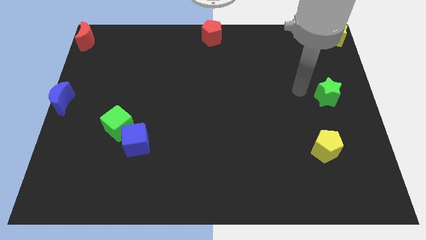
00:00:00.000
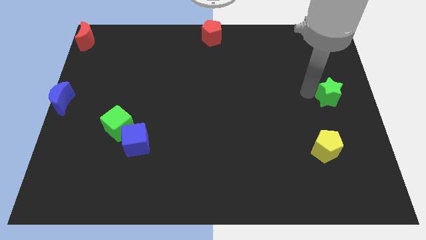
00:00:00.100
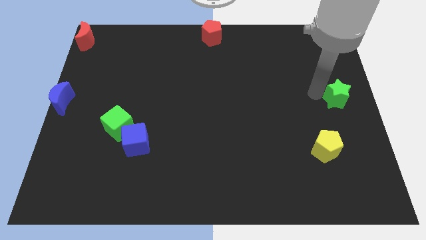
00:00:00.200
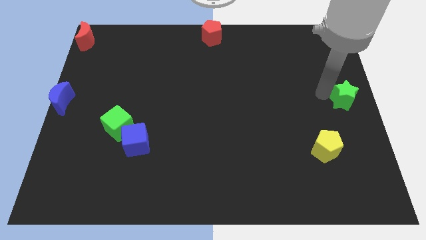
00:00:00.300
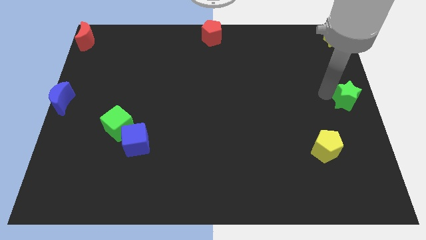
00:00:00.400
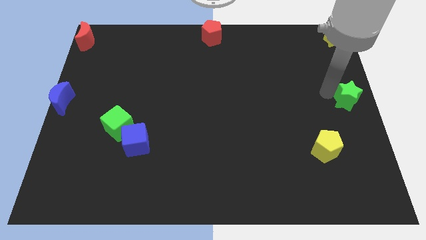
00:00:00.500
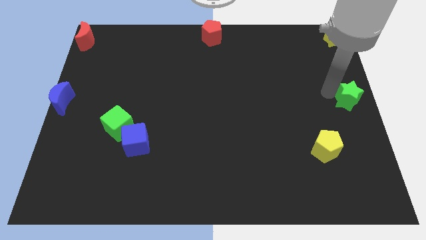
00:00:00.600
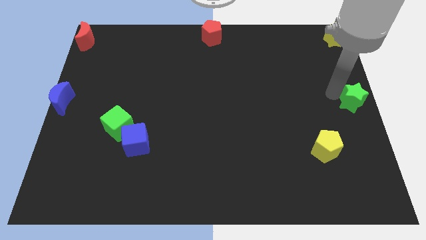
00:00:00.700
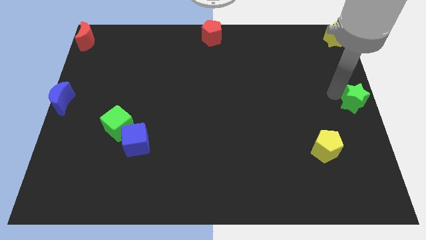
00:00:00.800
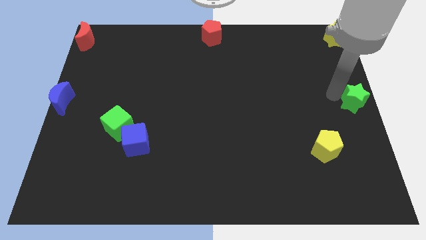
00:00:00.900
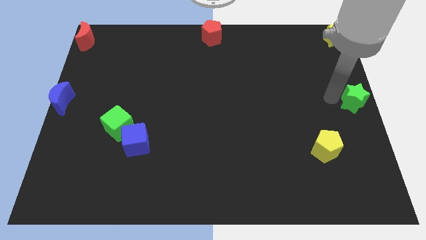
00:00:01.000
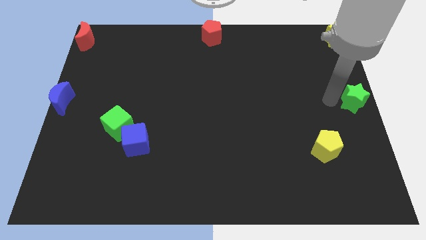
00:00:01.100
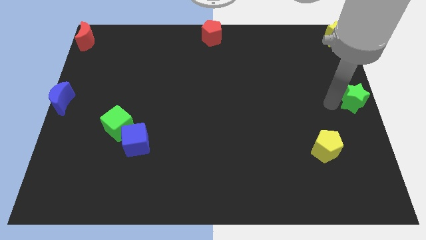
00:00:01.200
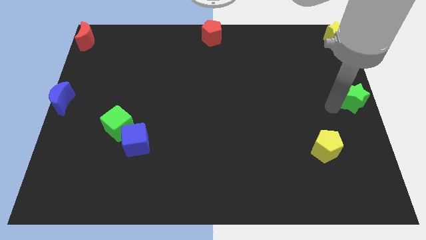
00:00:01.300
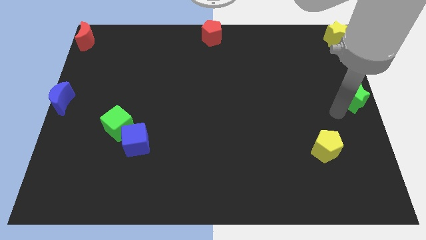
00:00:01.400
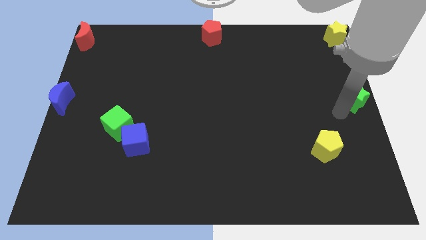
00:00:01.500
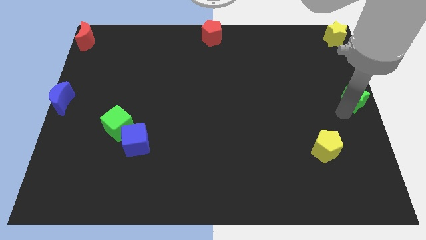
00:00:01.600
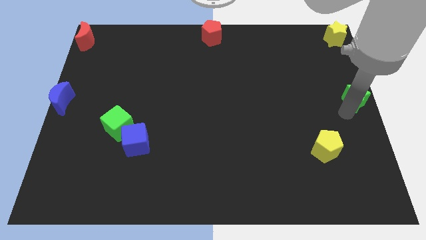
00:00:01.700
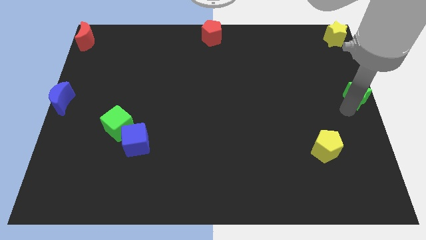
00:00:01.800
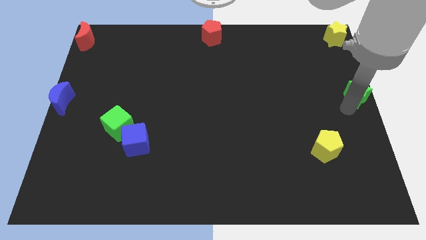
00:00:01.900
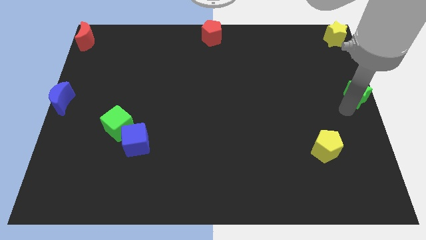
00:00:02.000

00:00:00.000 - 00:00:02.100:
place green star to the center right

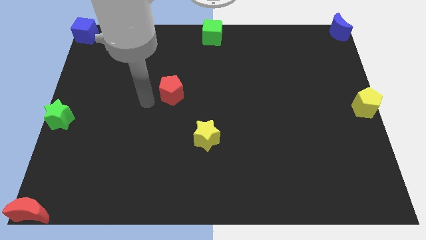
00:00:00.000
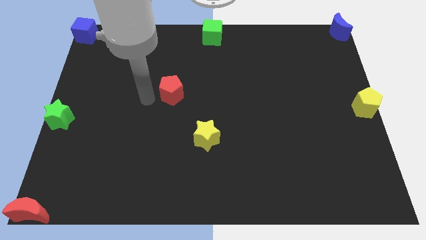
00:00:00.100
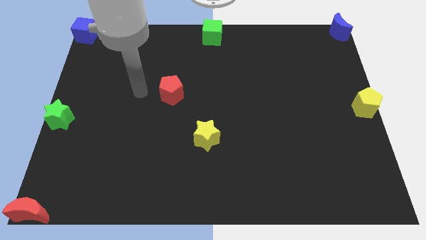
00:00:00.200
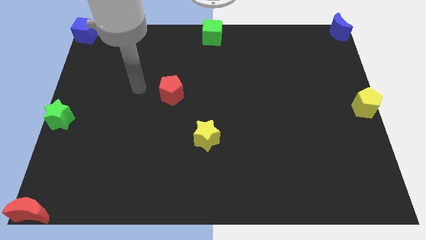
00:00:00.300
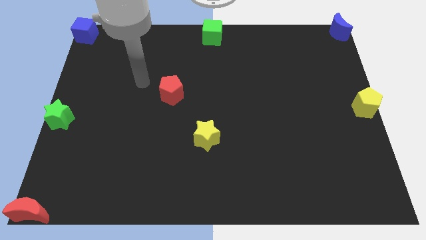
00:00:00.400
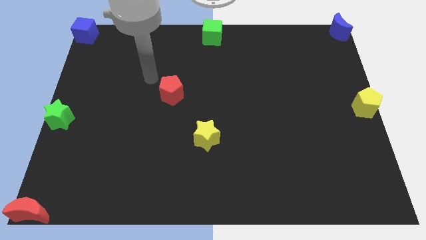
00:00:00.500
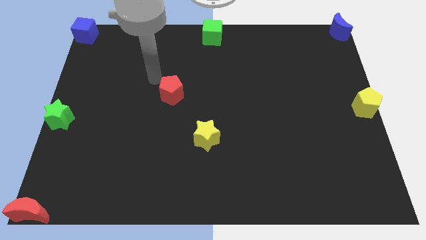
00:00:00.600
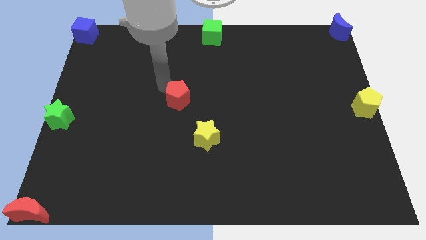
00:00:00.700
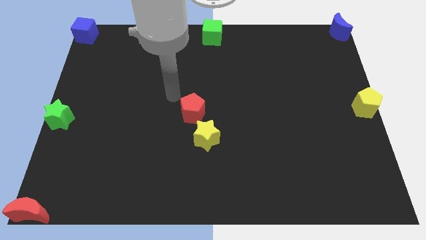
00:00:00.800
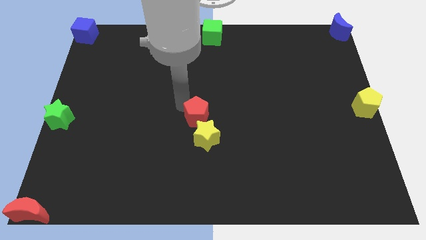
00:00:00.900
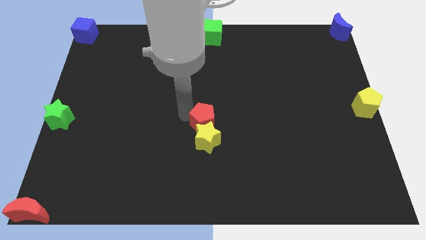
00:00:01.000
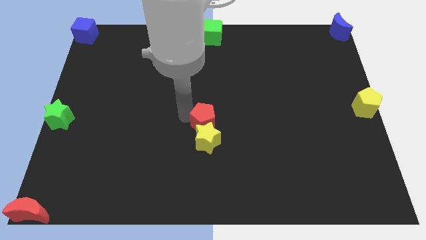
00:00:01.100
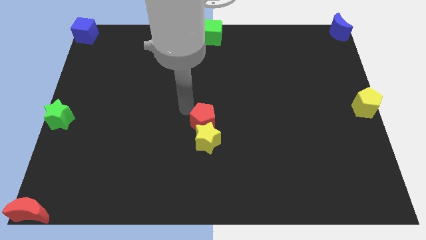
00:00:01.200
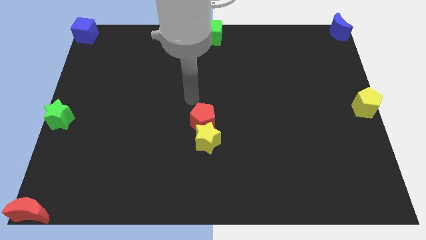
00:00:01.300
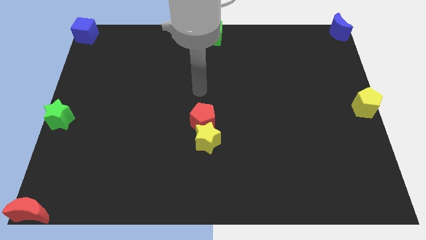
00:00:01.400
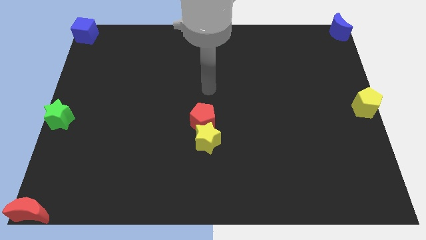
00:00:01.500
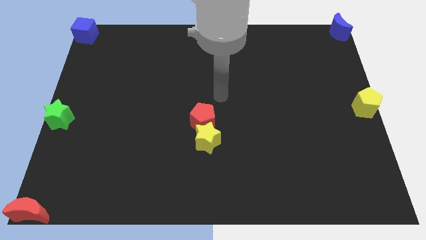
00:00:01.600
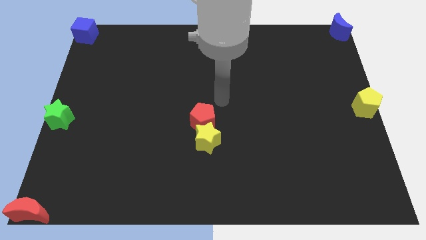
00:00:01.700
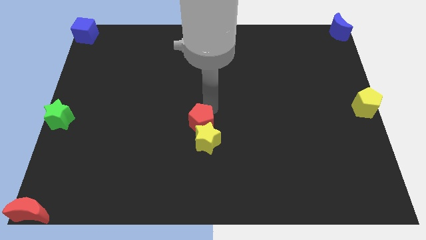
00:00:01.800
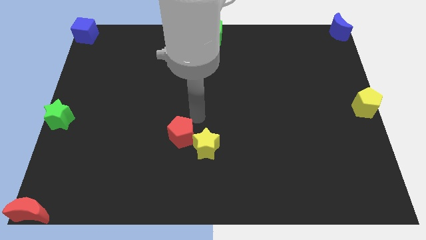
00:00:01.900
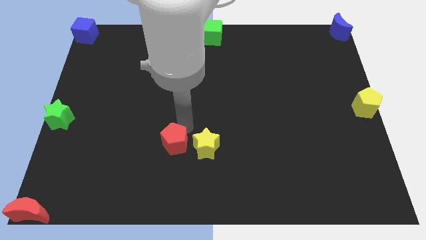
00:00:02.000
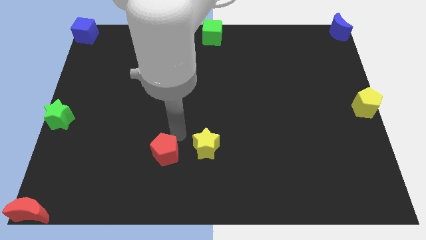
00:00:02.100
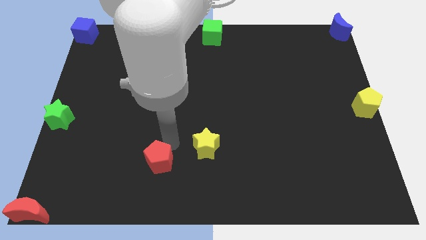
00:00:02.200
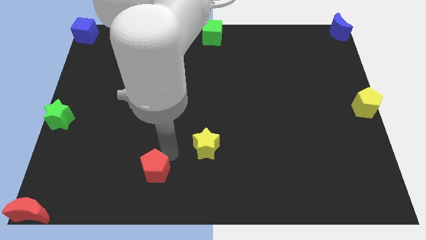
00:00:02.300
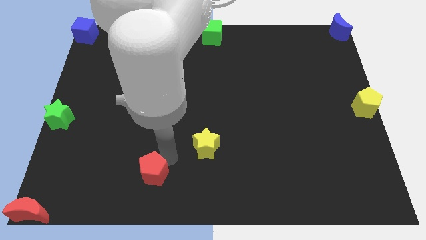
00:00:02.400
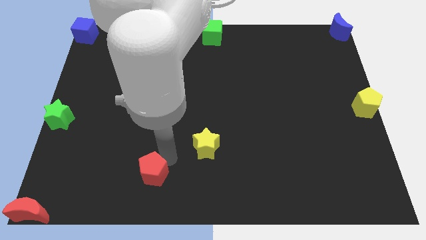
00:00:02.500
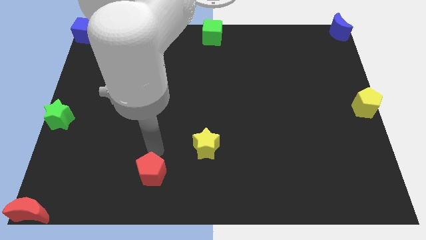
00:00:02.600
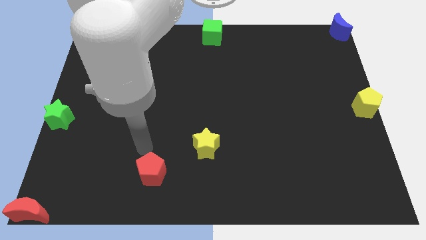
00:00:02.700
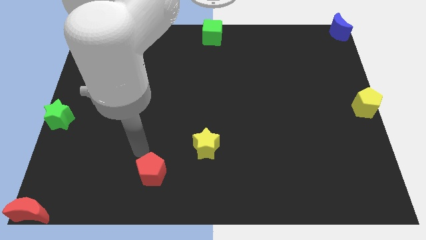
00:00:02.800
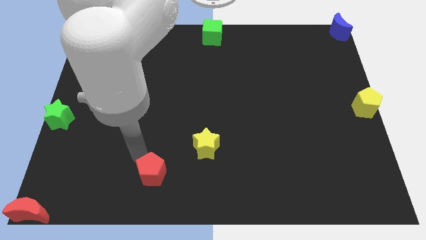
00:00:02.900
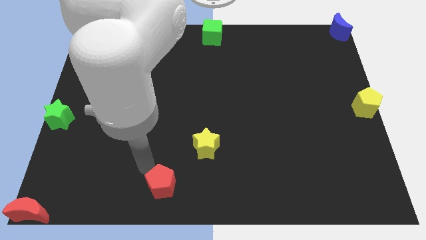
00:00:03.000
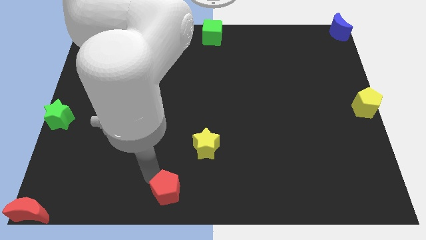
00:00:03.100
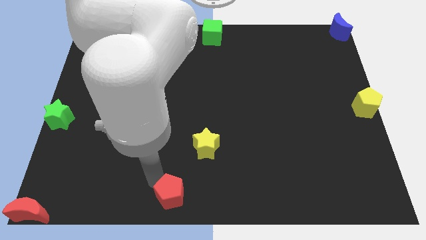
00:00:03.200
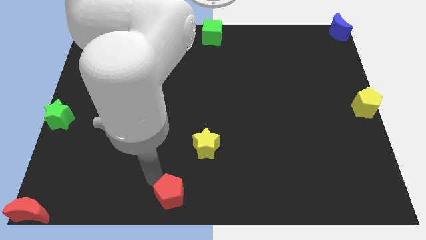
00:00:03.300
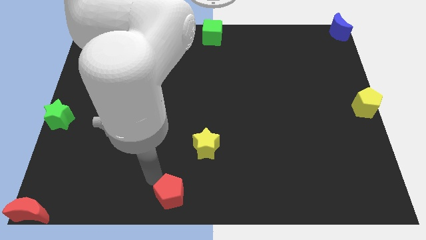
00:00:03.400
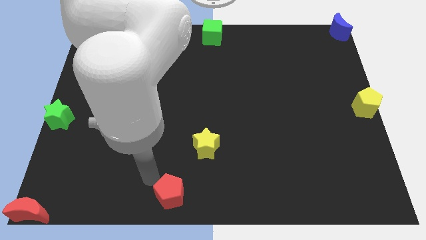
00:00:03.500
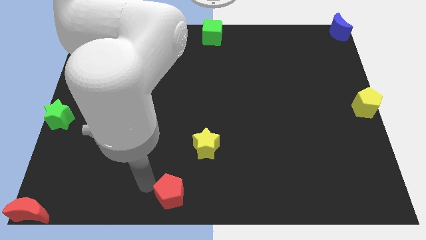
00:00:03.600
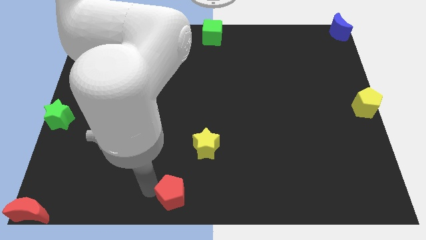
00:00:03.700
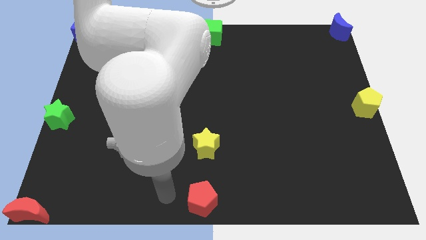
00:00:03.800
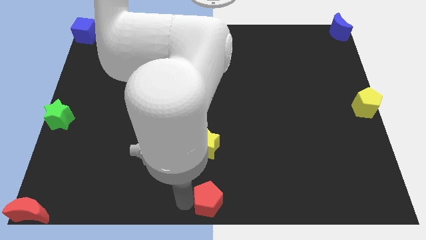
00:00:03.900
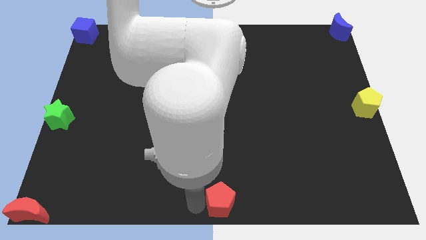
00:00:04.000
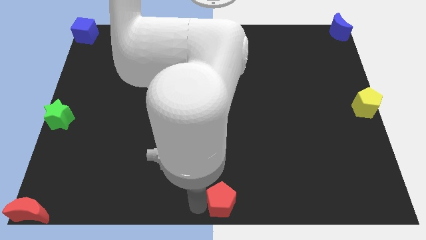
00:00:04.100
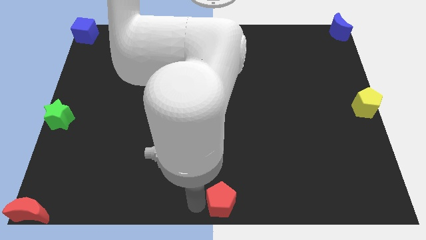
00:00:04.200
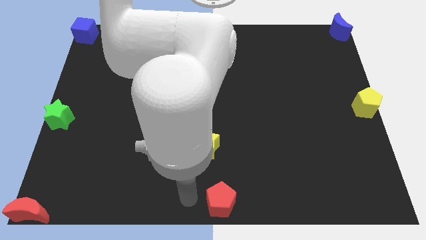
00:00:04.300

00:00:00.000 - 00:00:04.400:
push the red pentagon to the bottom center

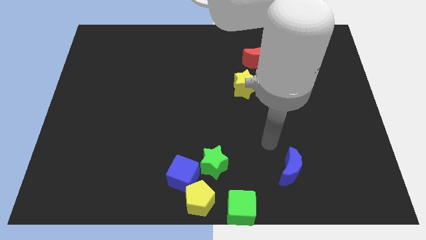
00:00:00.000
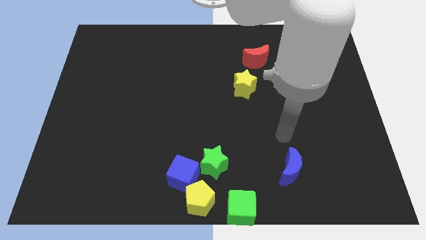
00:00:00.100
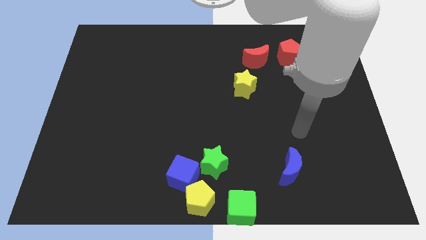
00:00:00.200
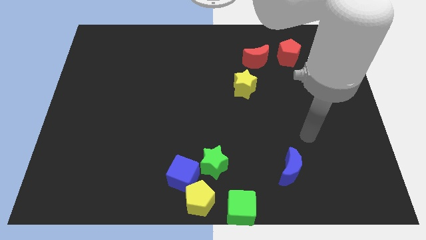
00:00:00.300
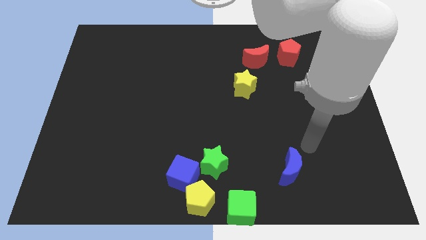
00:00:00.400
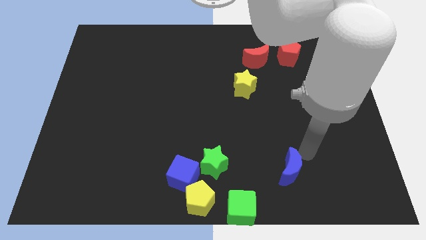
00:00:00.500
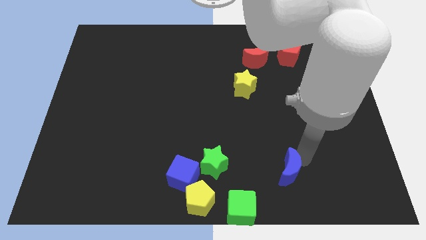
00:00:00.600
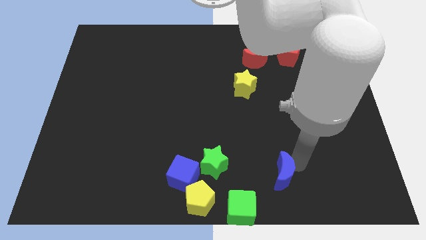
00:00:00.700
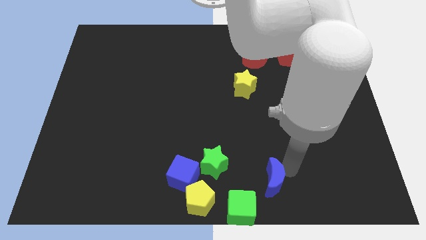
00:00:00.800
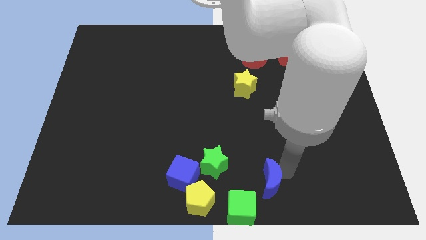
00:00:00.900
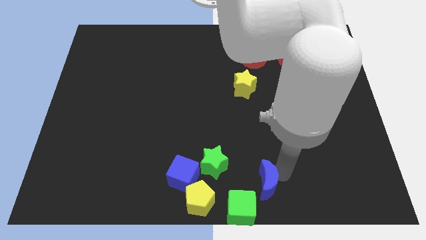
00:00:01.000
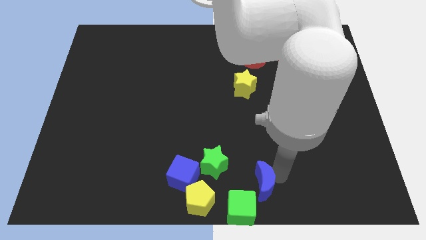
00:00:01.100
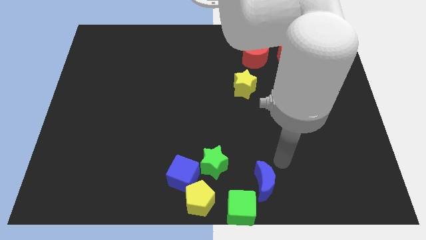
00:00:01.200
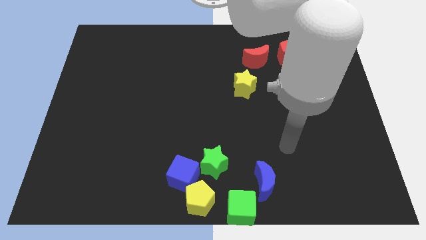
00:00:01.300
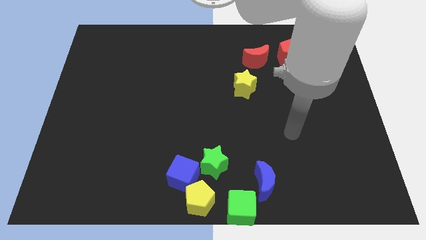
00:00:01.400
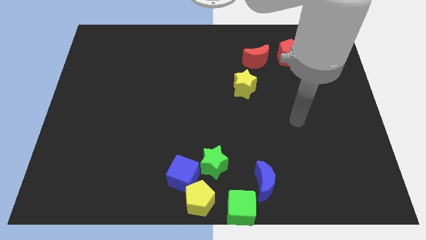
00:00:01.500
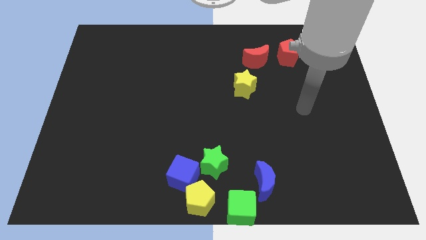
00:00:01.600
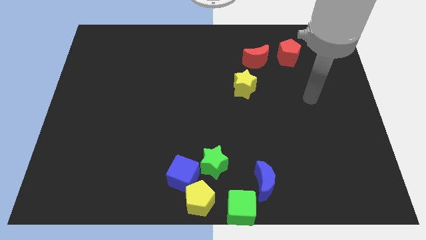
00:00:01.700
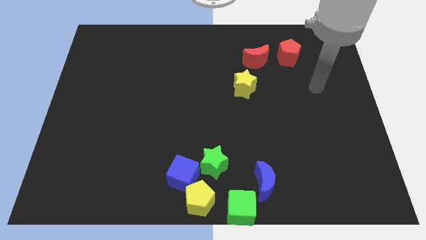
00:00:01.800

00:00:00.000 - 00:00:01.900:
move blue crescent to the top right side of green cube

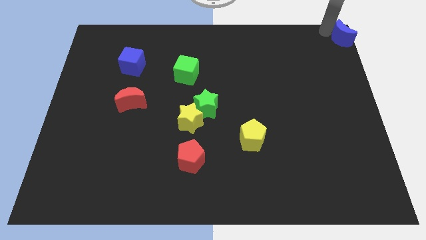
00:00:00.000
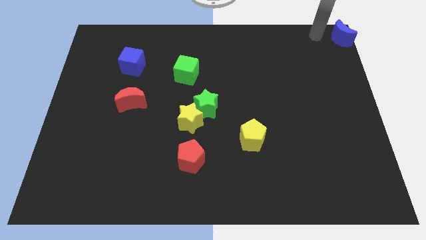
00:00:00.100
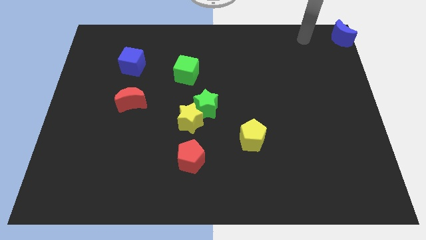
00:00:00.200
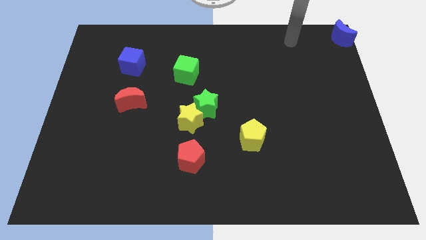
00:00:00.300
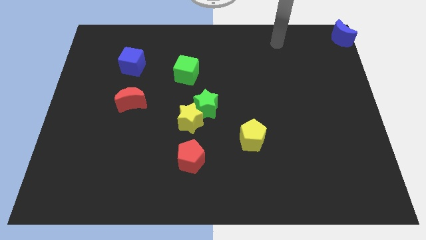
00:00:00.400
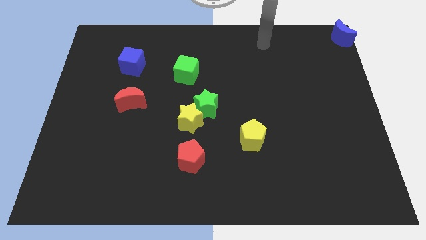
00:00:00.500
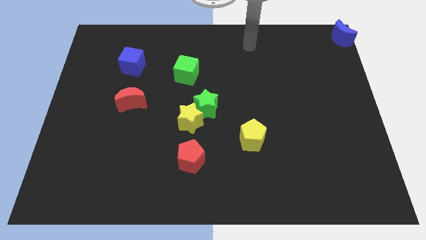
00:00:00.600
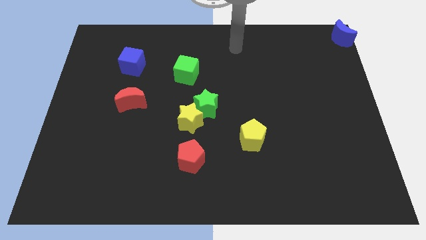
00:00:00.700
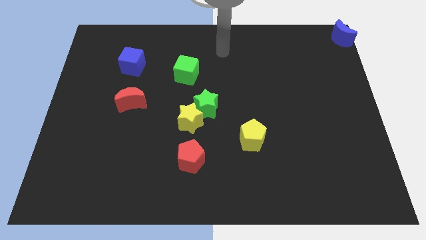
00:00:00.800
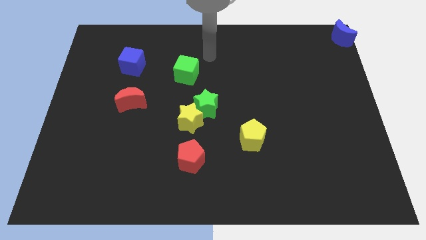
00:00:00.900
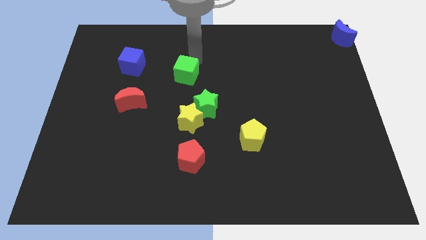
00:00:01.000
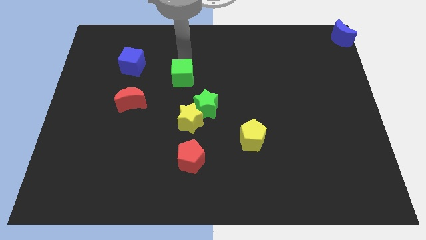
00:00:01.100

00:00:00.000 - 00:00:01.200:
move arm towards green cube
